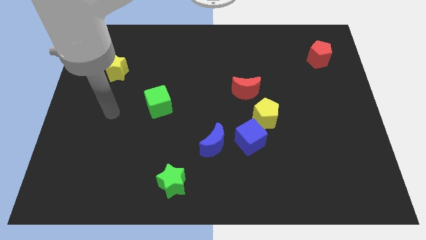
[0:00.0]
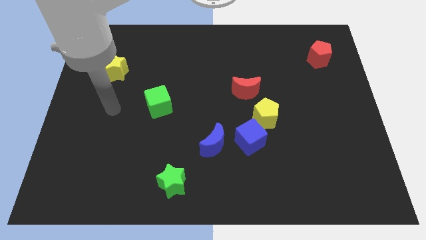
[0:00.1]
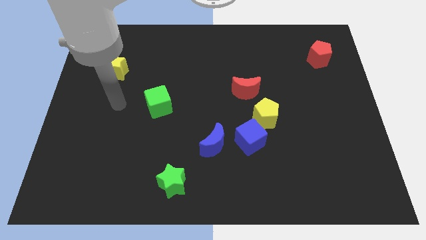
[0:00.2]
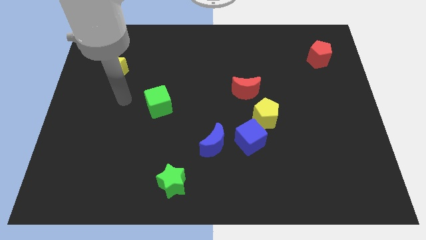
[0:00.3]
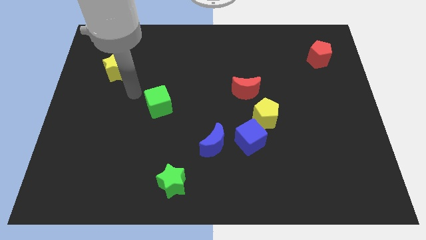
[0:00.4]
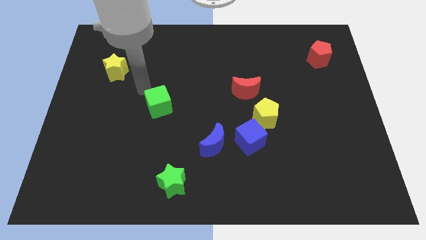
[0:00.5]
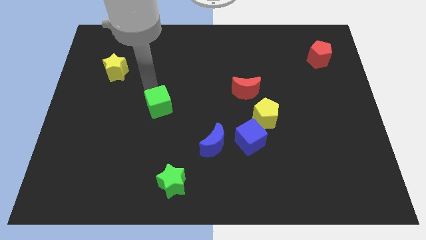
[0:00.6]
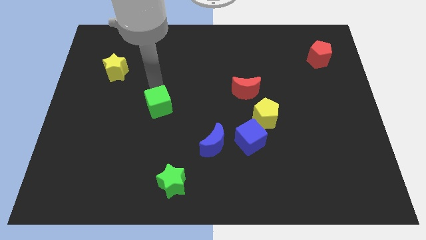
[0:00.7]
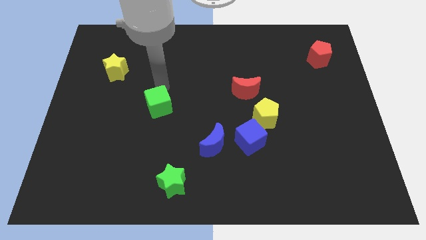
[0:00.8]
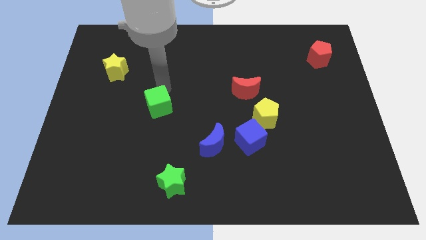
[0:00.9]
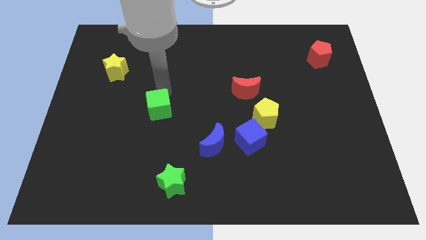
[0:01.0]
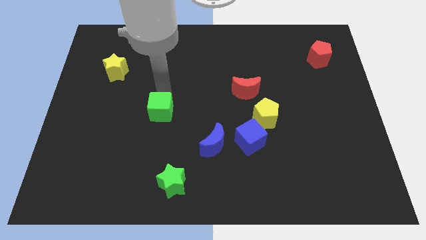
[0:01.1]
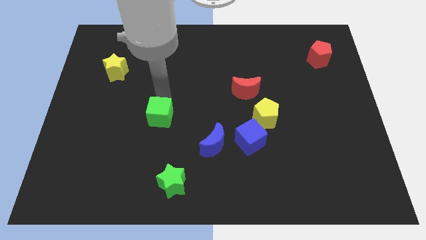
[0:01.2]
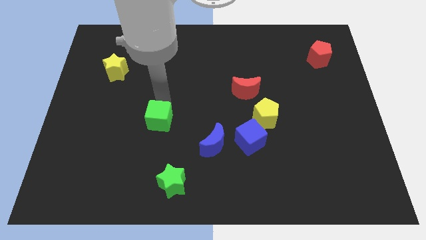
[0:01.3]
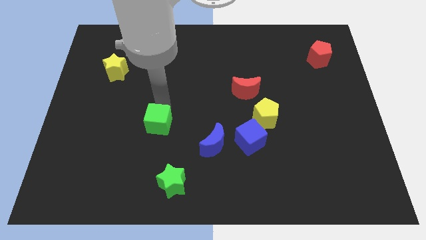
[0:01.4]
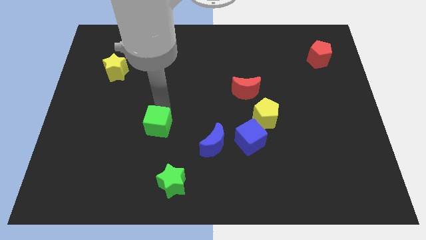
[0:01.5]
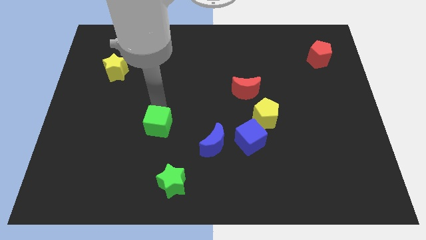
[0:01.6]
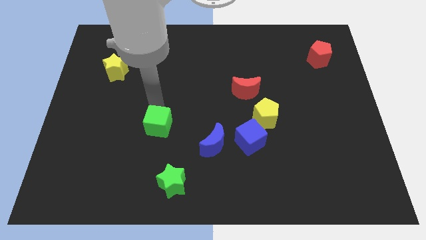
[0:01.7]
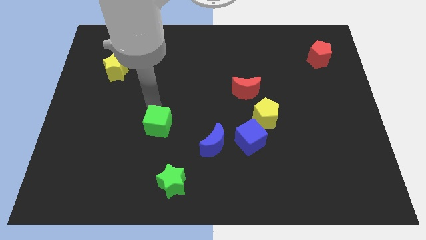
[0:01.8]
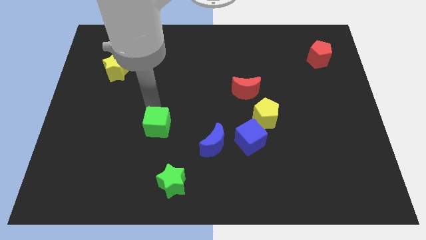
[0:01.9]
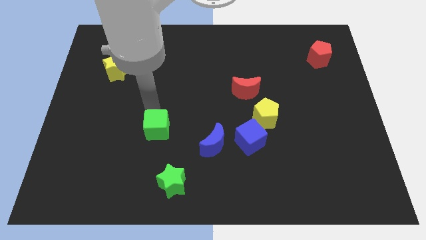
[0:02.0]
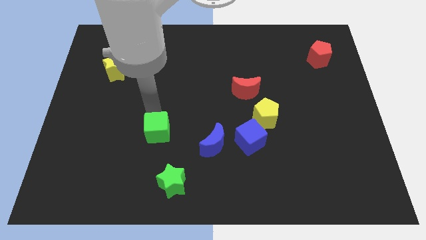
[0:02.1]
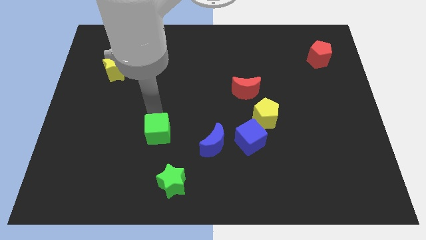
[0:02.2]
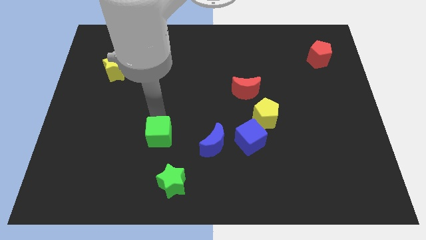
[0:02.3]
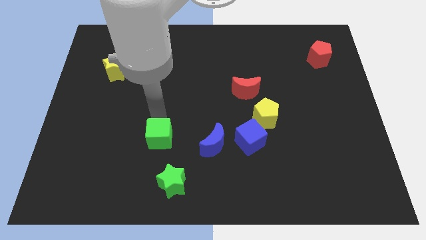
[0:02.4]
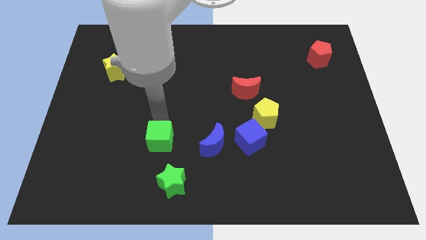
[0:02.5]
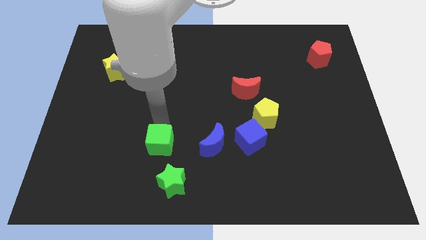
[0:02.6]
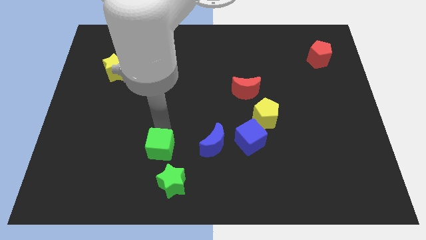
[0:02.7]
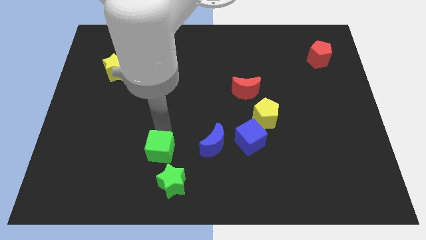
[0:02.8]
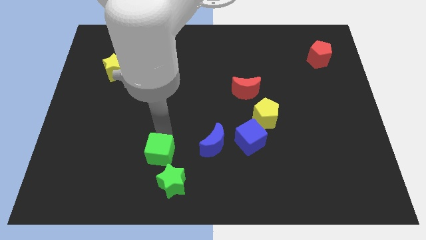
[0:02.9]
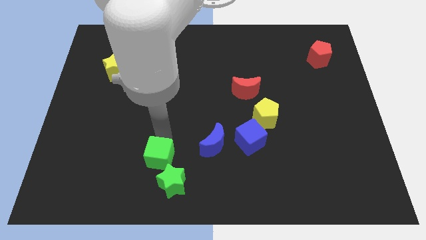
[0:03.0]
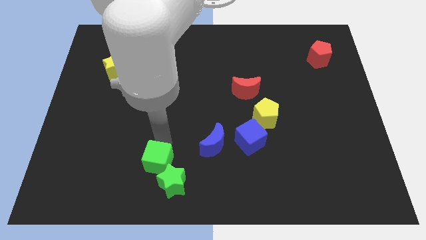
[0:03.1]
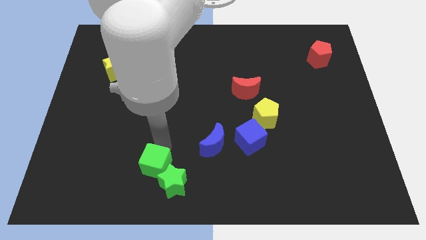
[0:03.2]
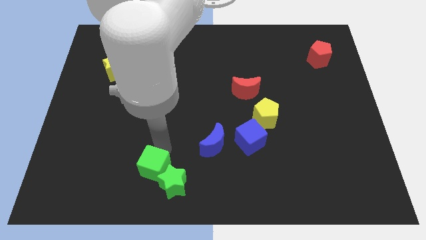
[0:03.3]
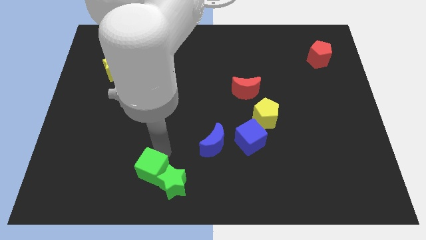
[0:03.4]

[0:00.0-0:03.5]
push the green cube to the green star

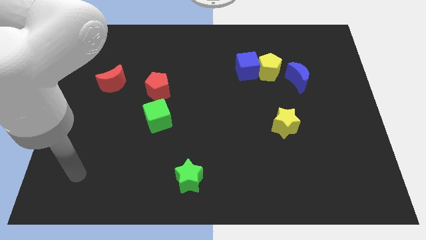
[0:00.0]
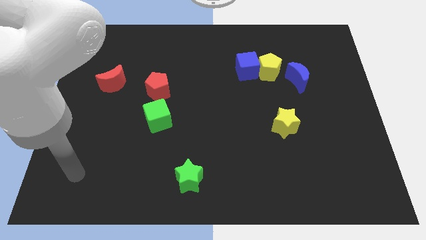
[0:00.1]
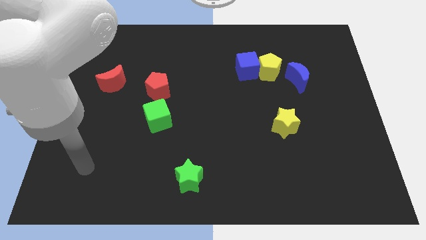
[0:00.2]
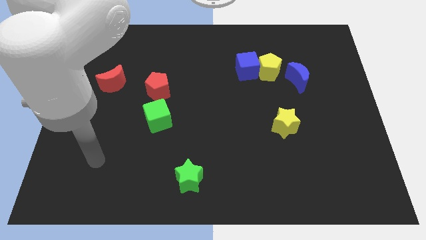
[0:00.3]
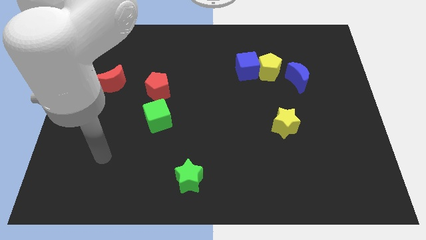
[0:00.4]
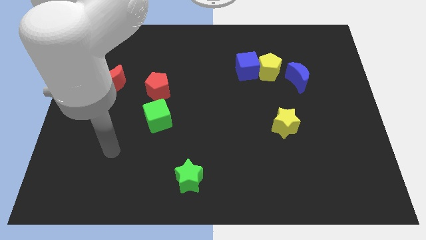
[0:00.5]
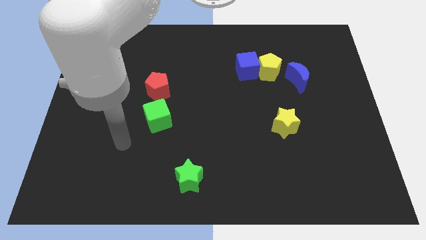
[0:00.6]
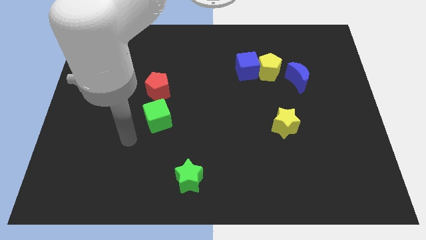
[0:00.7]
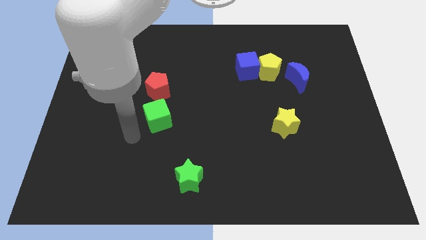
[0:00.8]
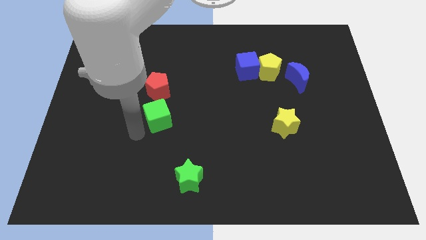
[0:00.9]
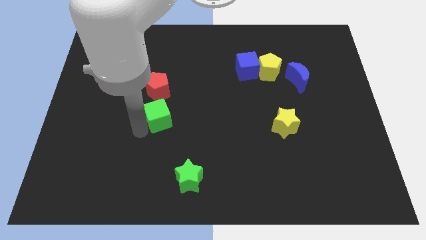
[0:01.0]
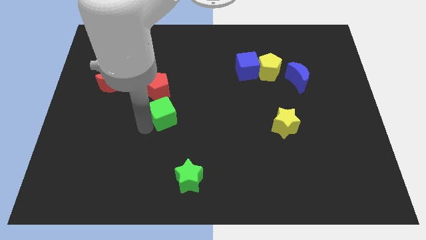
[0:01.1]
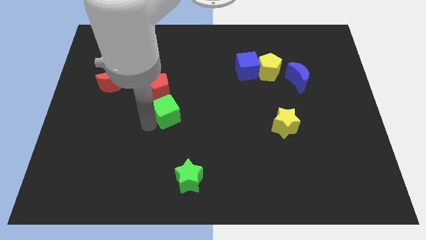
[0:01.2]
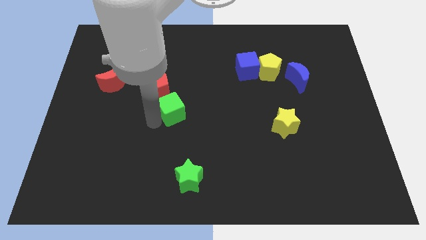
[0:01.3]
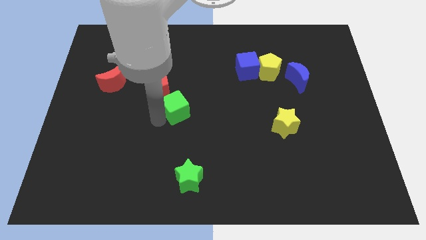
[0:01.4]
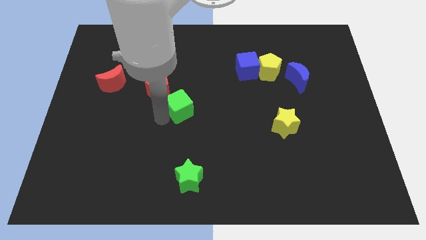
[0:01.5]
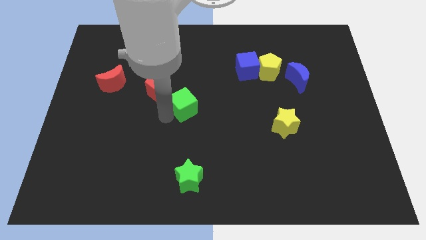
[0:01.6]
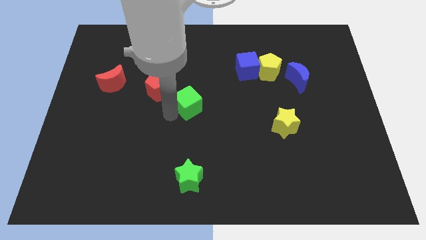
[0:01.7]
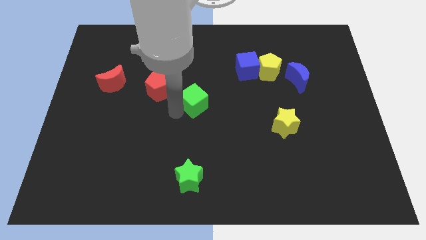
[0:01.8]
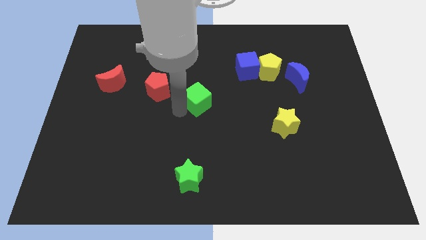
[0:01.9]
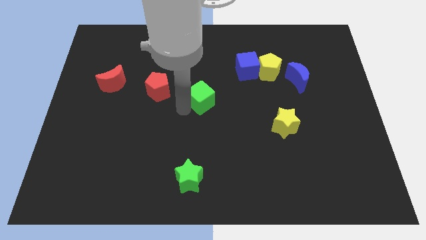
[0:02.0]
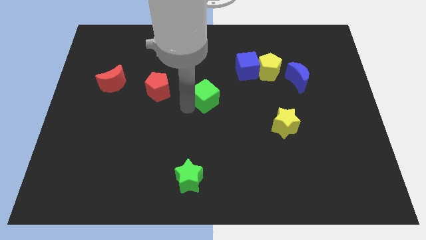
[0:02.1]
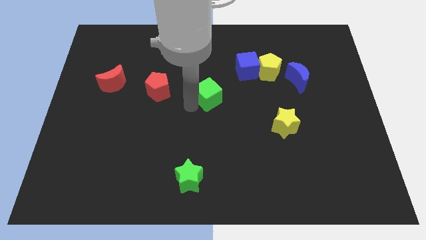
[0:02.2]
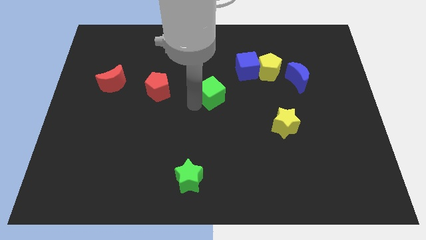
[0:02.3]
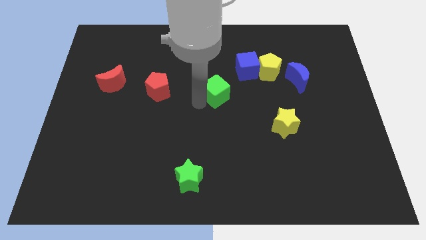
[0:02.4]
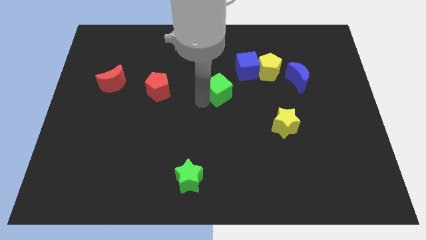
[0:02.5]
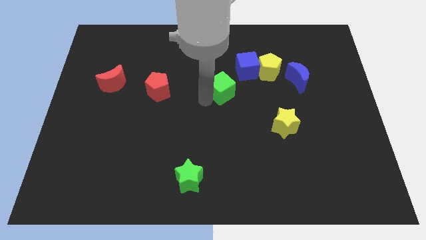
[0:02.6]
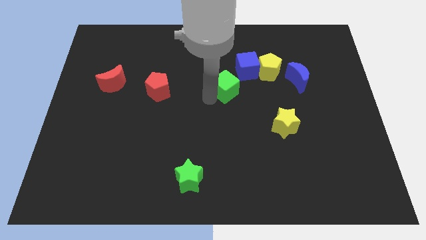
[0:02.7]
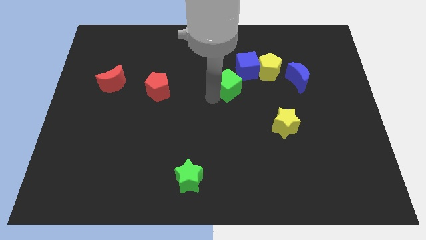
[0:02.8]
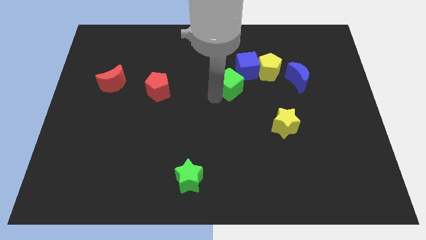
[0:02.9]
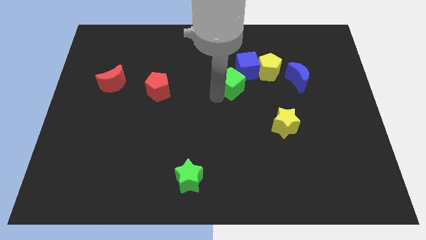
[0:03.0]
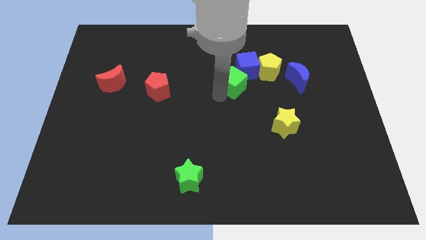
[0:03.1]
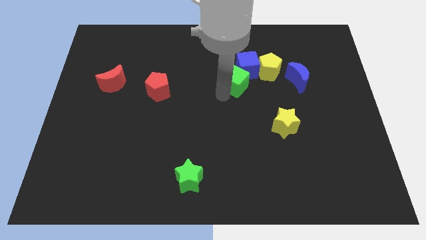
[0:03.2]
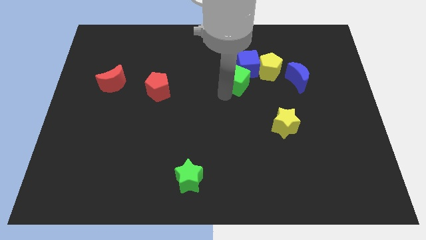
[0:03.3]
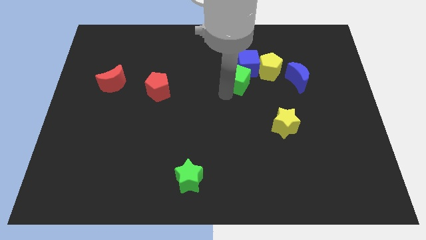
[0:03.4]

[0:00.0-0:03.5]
put the green cube next to the blue cube

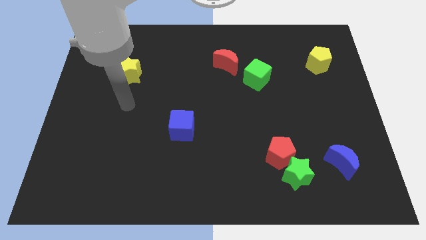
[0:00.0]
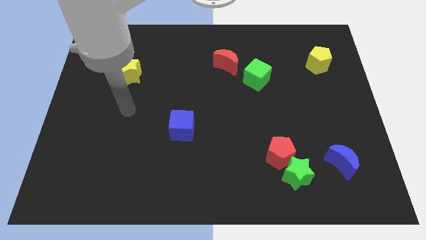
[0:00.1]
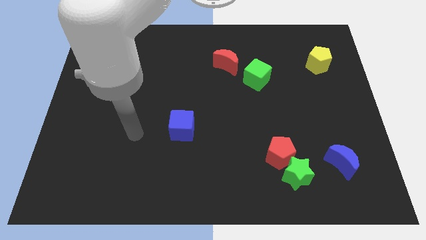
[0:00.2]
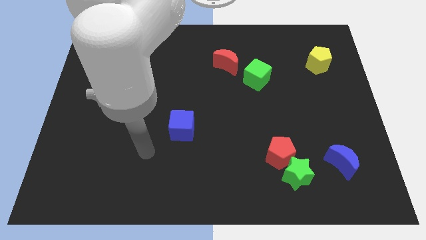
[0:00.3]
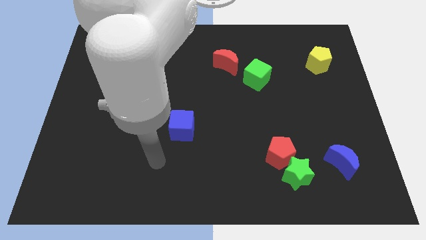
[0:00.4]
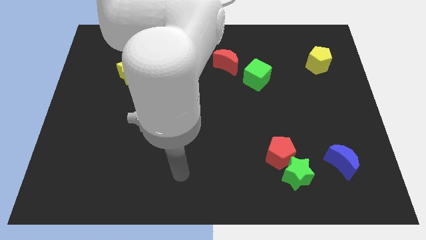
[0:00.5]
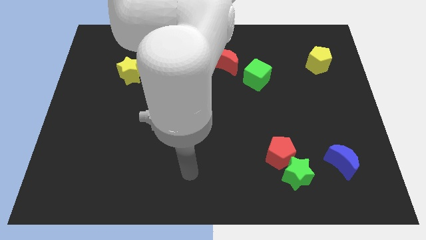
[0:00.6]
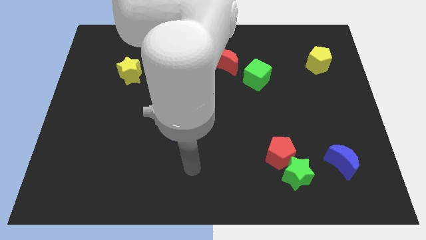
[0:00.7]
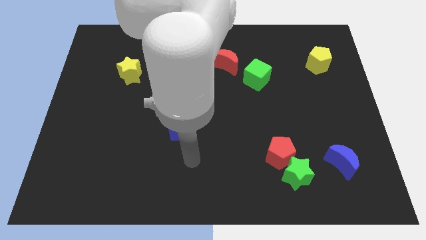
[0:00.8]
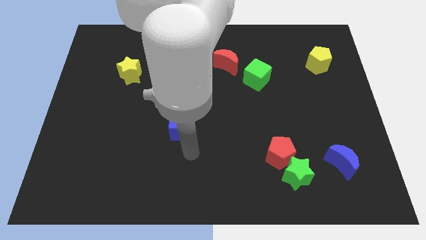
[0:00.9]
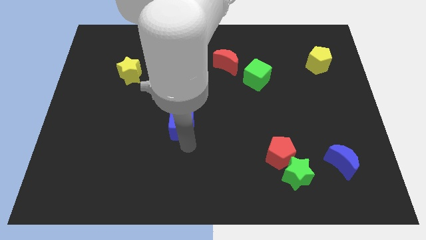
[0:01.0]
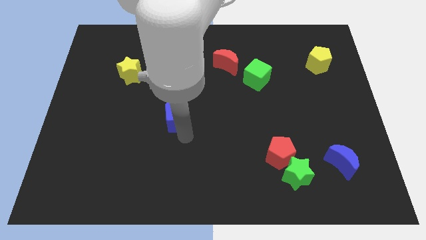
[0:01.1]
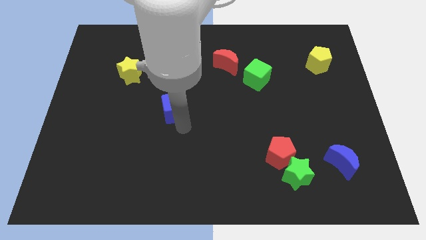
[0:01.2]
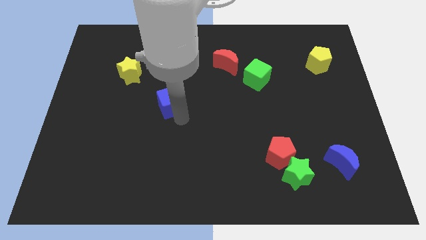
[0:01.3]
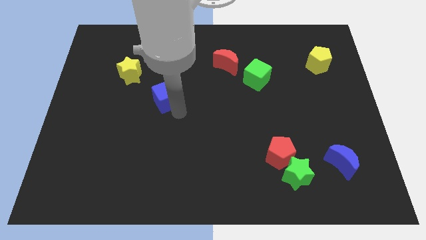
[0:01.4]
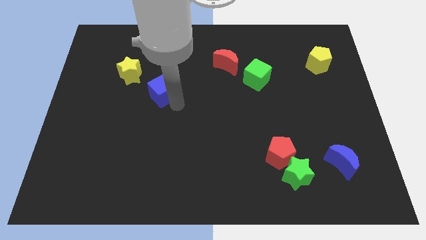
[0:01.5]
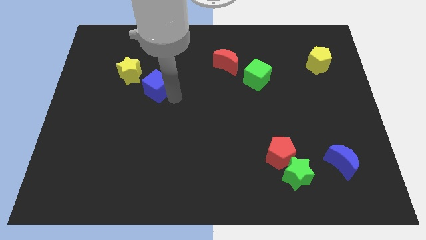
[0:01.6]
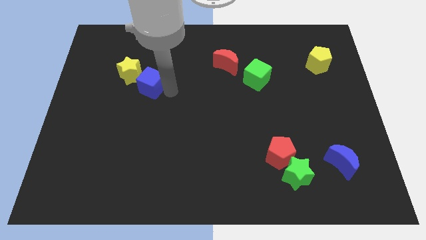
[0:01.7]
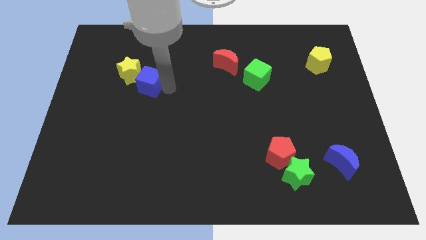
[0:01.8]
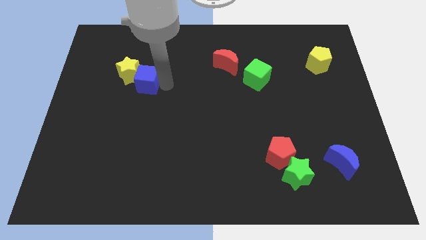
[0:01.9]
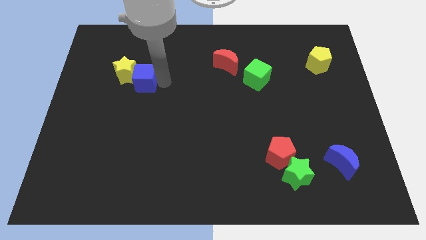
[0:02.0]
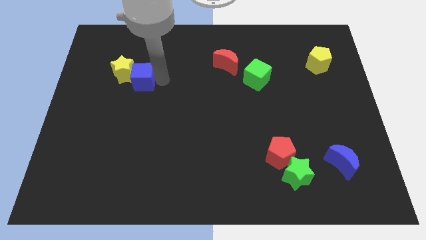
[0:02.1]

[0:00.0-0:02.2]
move the blue cube next to the yellow star
